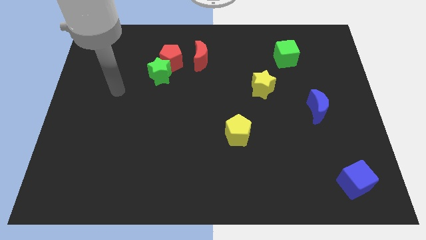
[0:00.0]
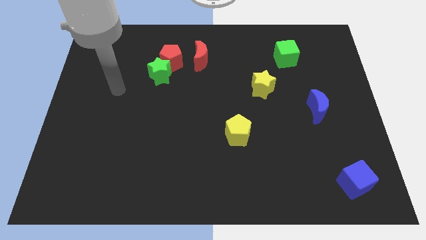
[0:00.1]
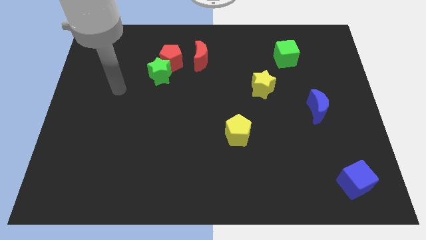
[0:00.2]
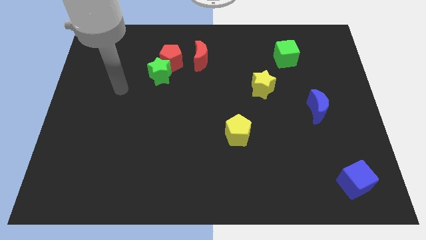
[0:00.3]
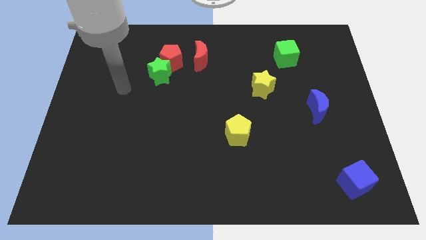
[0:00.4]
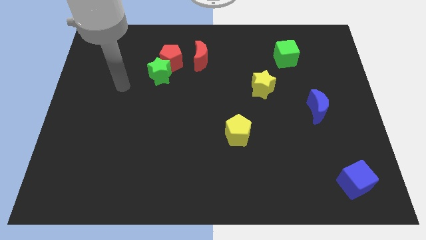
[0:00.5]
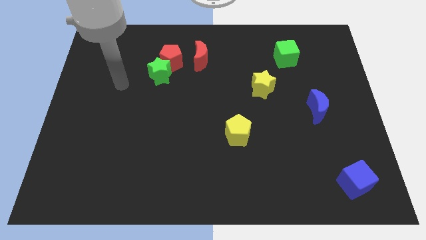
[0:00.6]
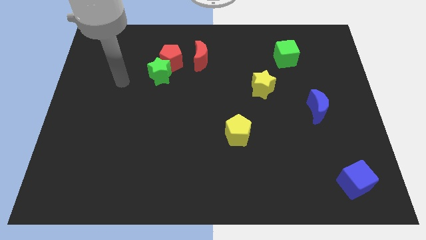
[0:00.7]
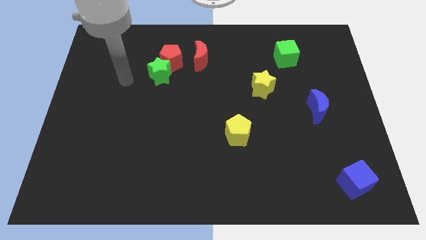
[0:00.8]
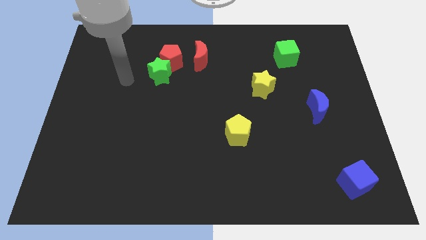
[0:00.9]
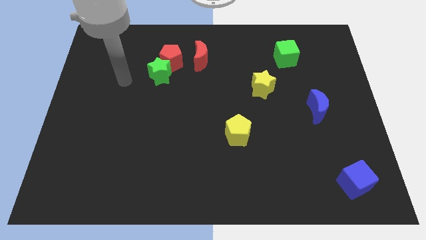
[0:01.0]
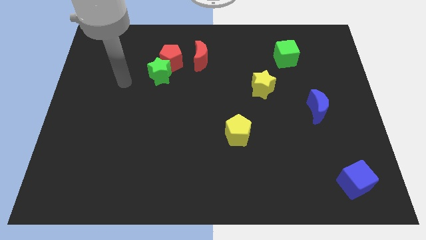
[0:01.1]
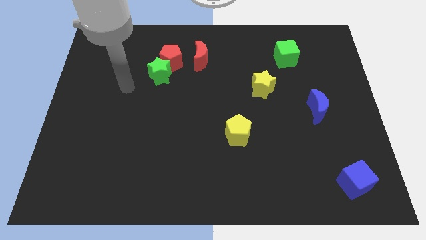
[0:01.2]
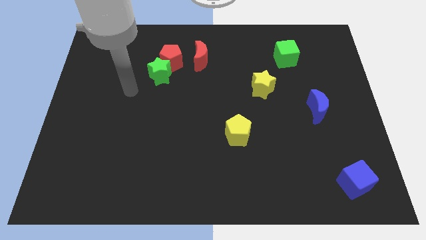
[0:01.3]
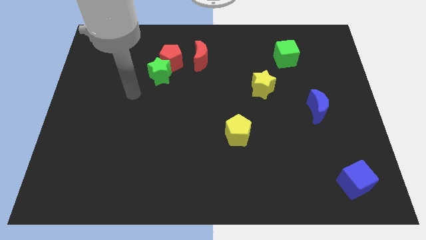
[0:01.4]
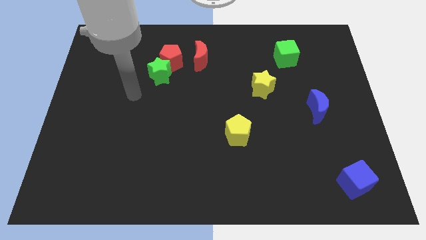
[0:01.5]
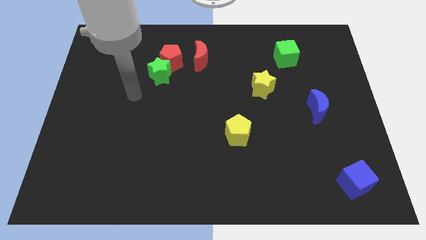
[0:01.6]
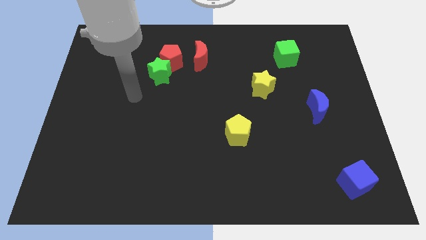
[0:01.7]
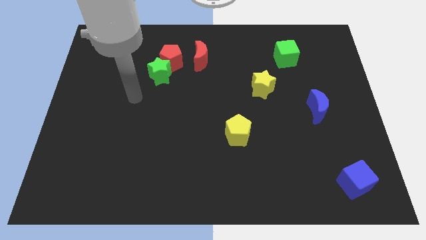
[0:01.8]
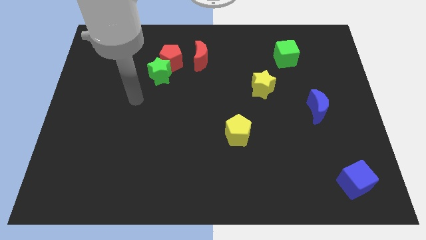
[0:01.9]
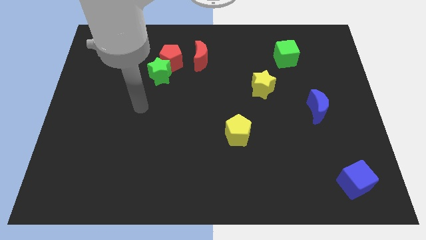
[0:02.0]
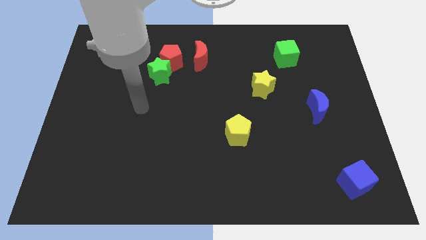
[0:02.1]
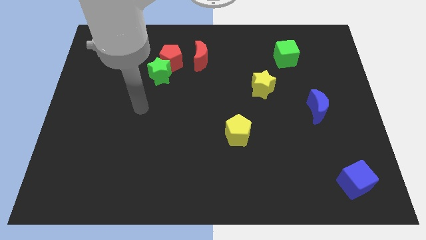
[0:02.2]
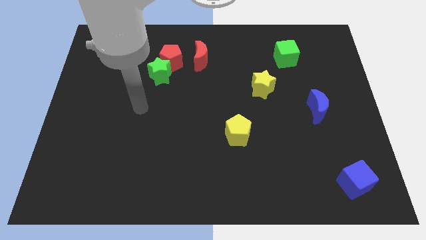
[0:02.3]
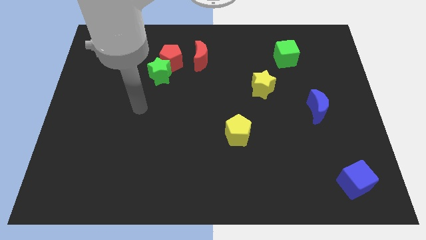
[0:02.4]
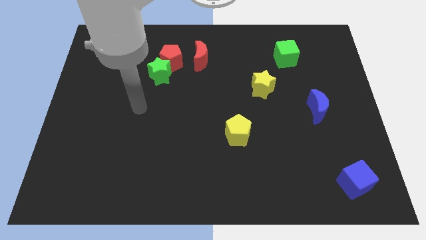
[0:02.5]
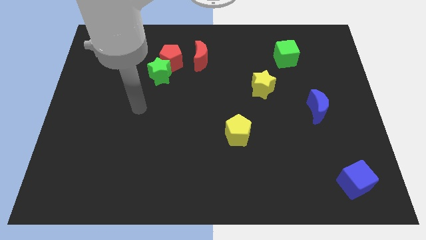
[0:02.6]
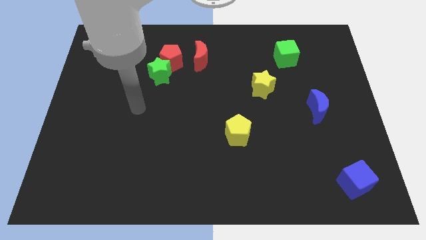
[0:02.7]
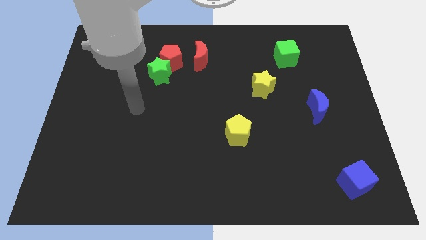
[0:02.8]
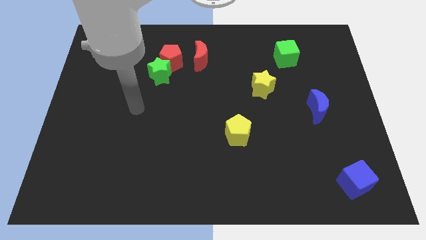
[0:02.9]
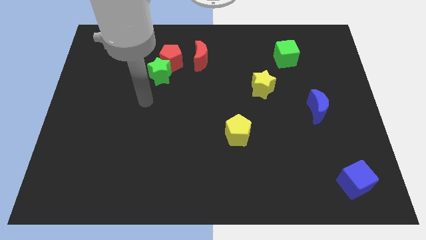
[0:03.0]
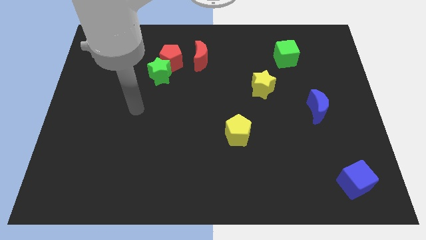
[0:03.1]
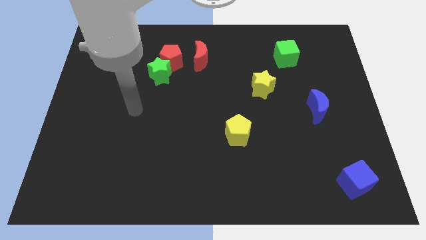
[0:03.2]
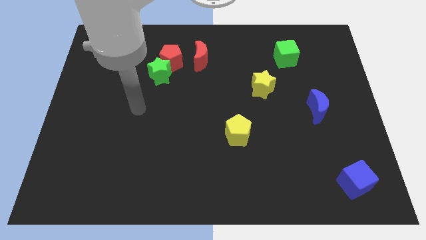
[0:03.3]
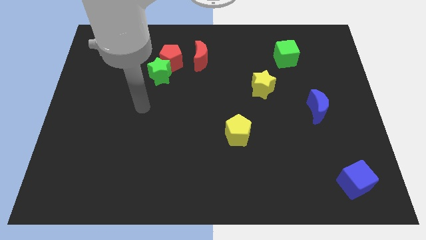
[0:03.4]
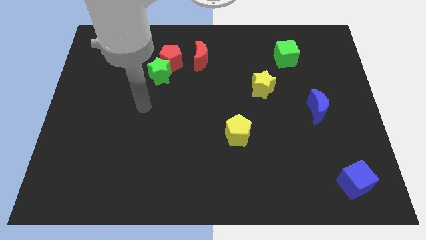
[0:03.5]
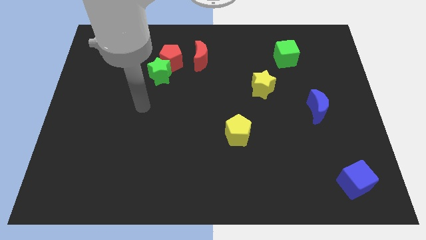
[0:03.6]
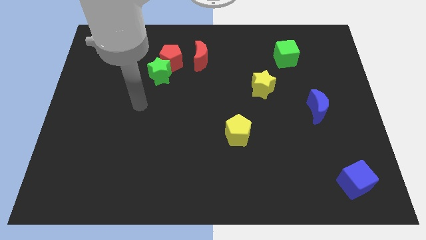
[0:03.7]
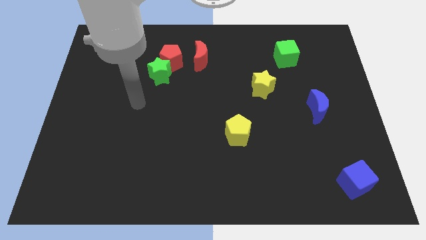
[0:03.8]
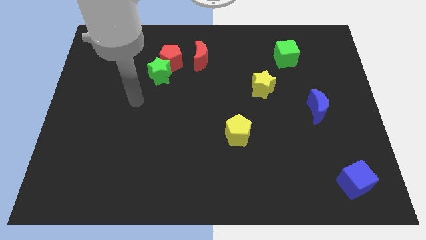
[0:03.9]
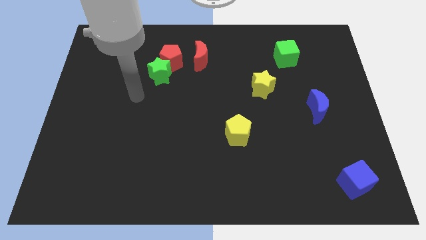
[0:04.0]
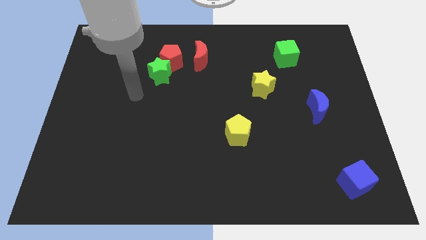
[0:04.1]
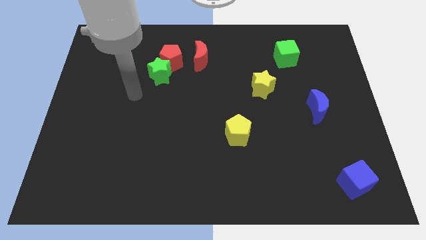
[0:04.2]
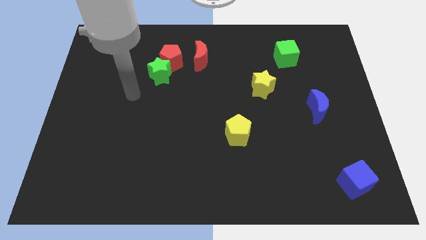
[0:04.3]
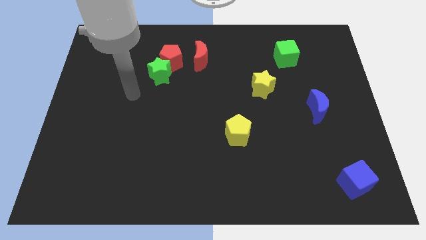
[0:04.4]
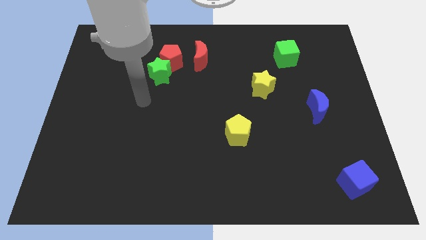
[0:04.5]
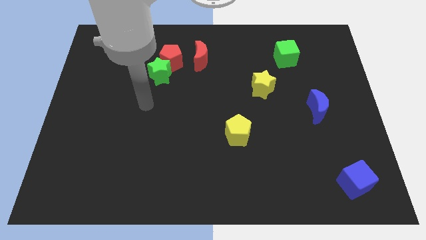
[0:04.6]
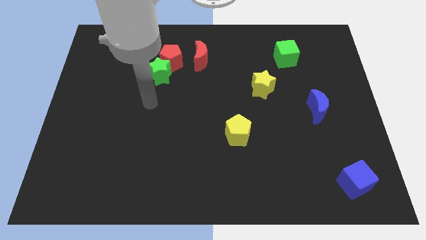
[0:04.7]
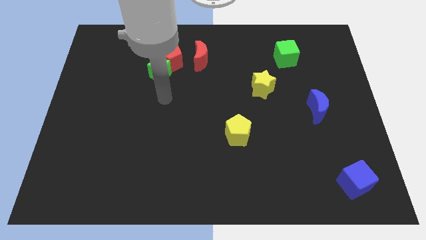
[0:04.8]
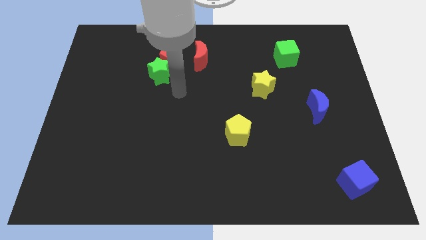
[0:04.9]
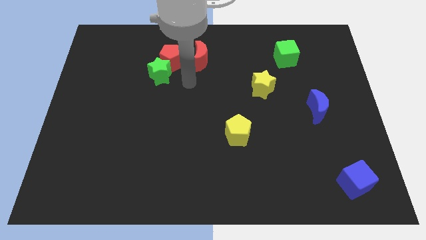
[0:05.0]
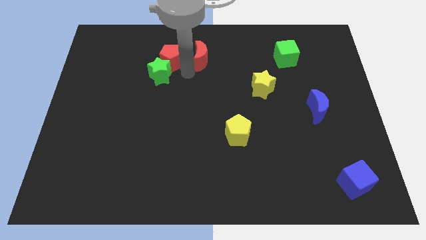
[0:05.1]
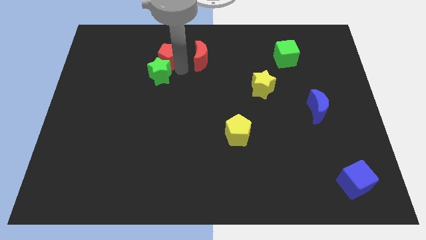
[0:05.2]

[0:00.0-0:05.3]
move your arm in between to the two red blocks

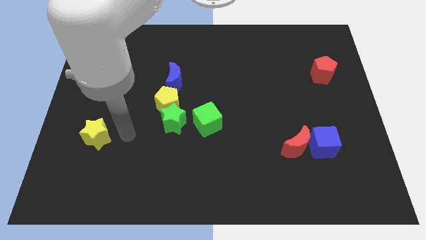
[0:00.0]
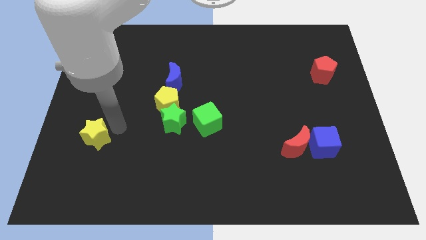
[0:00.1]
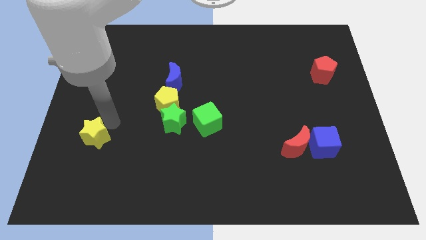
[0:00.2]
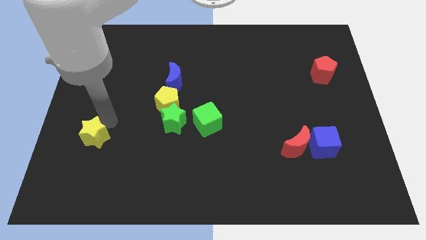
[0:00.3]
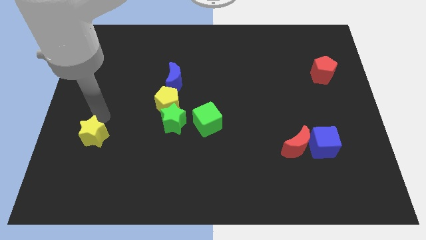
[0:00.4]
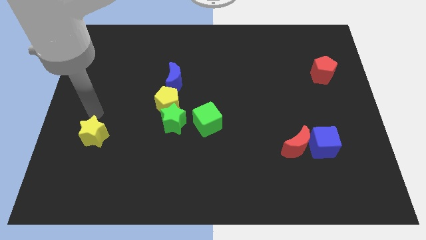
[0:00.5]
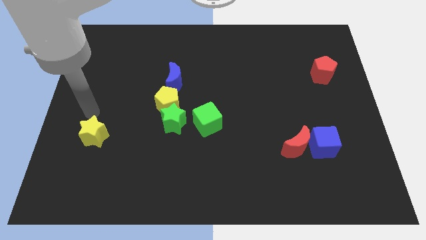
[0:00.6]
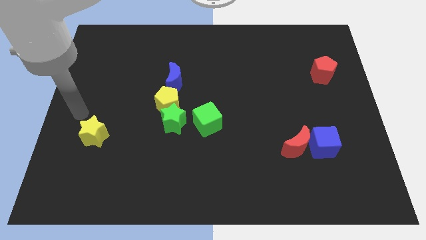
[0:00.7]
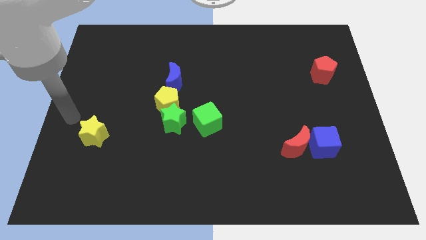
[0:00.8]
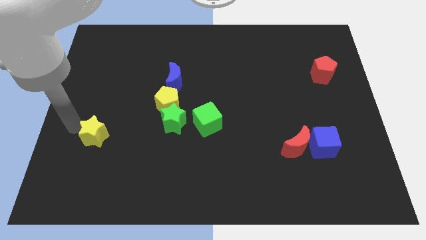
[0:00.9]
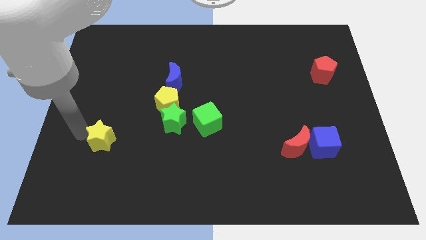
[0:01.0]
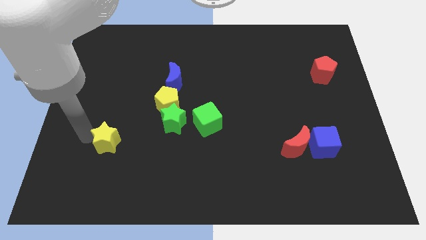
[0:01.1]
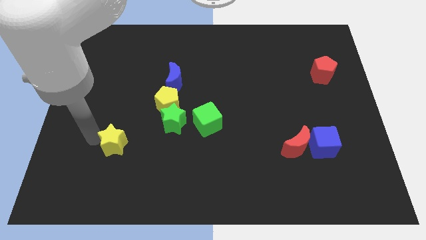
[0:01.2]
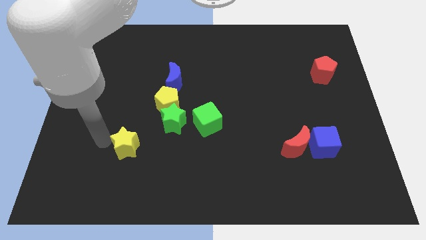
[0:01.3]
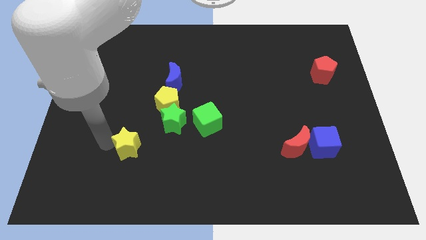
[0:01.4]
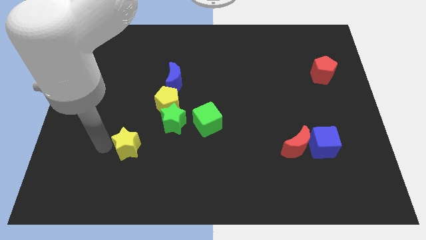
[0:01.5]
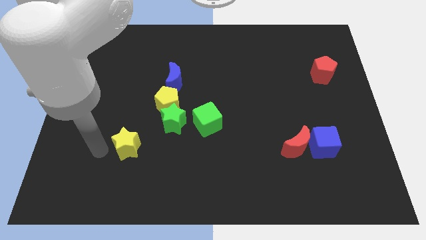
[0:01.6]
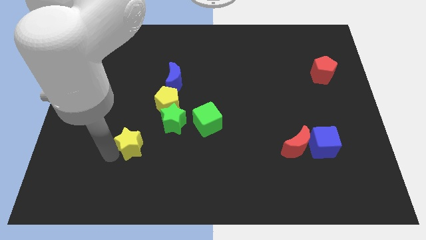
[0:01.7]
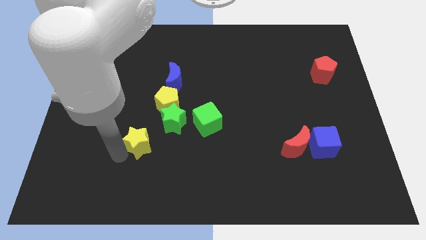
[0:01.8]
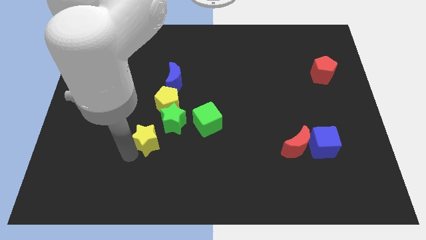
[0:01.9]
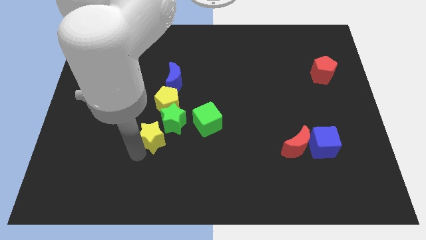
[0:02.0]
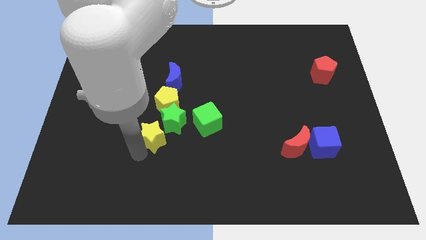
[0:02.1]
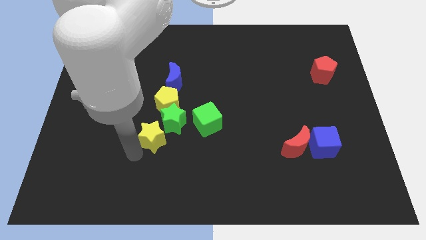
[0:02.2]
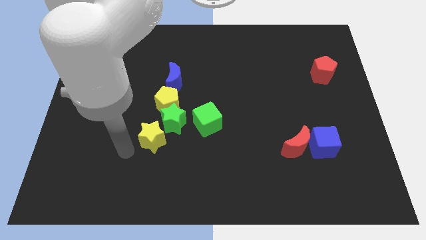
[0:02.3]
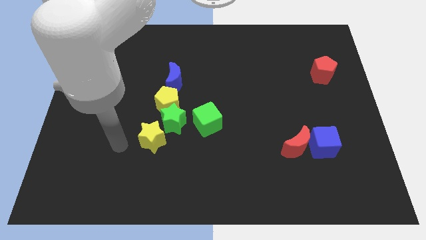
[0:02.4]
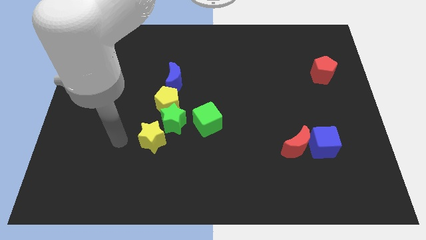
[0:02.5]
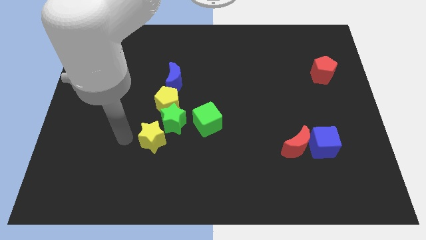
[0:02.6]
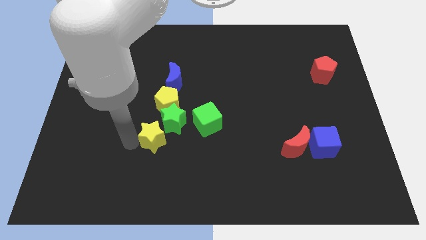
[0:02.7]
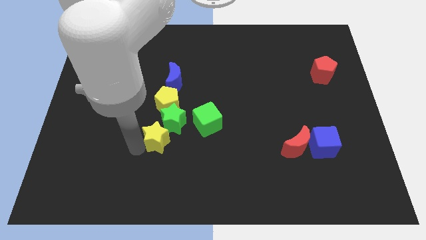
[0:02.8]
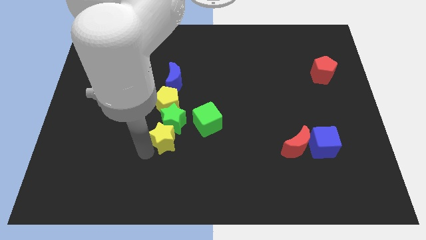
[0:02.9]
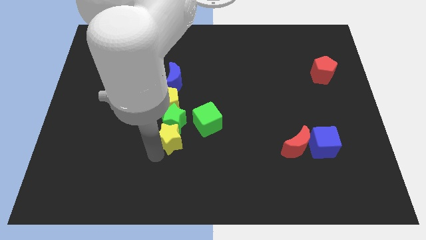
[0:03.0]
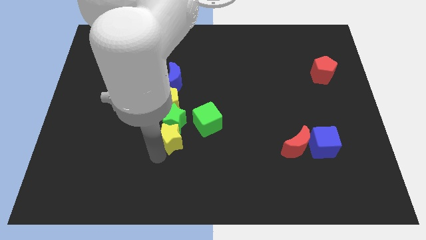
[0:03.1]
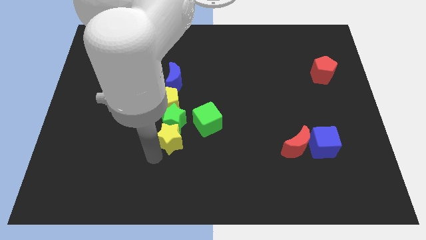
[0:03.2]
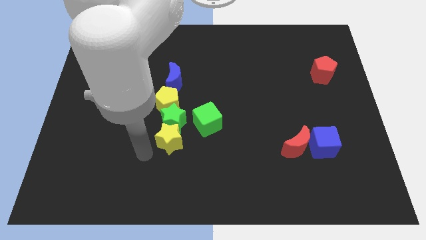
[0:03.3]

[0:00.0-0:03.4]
move the yellow star below to the green star

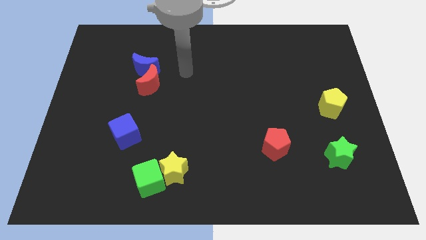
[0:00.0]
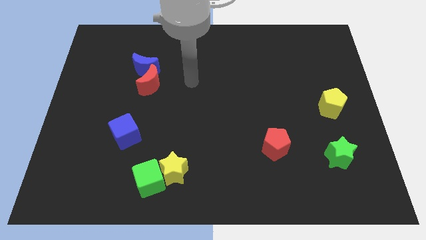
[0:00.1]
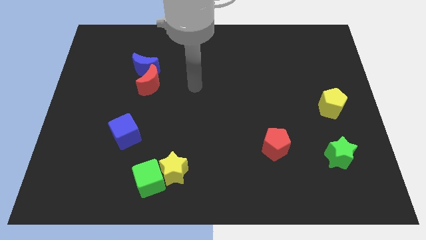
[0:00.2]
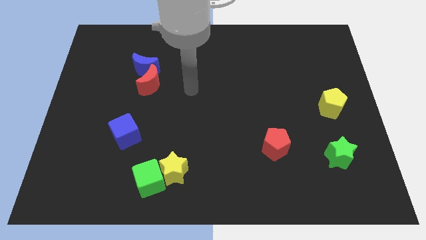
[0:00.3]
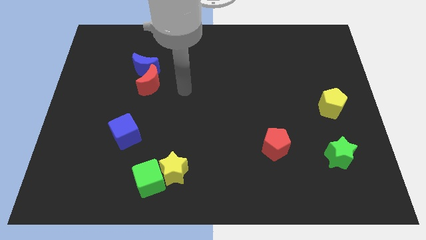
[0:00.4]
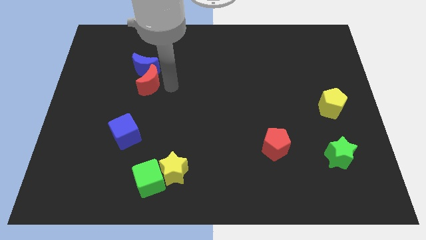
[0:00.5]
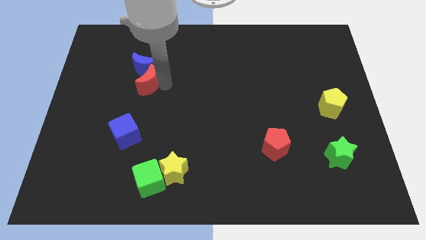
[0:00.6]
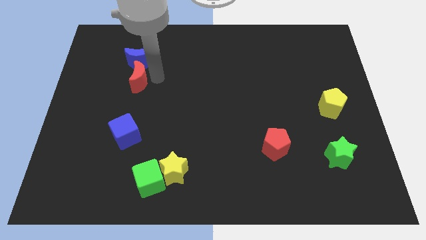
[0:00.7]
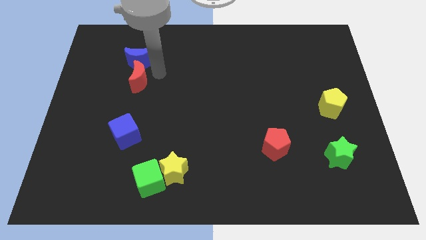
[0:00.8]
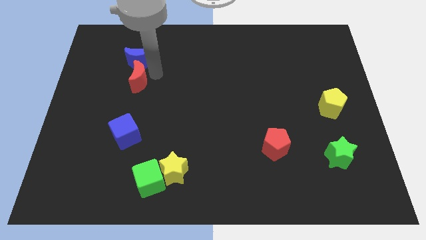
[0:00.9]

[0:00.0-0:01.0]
place arm near red moon
